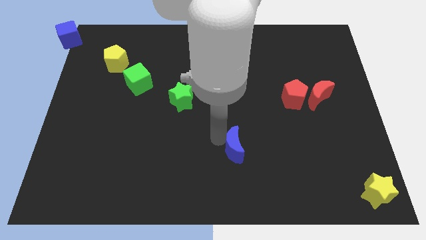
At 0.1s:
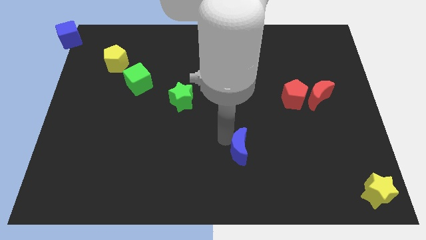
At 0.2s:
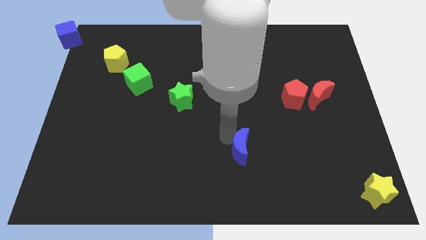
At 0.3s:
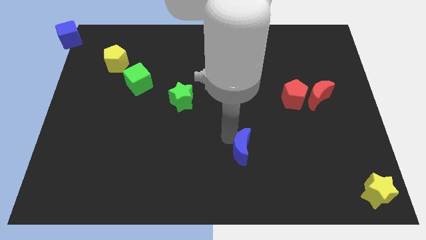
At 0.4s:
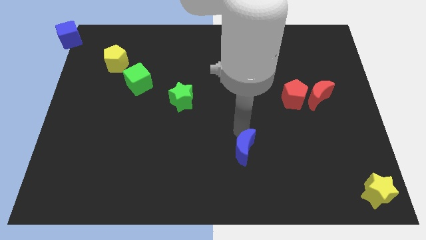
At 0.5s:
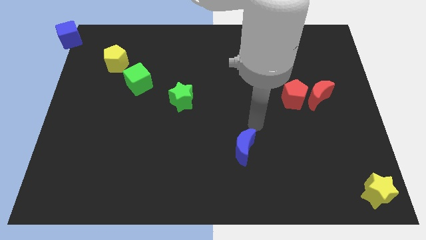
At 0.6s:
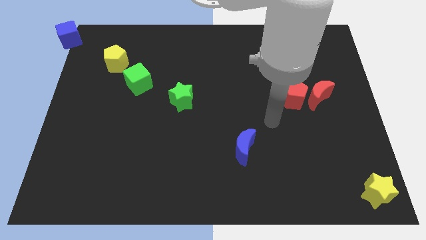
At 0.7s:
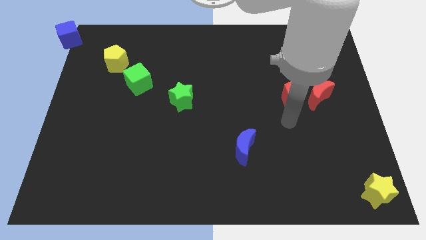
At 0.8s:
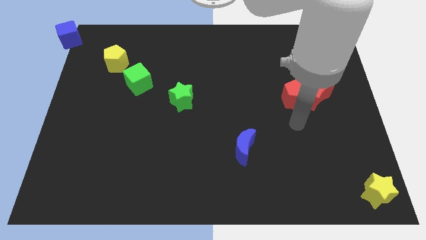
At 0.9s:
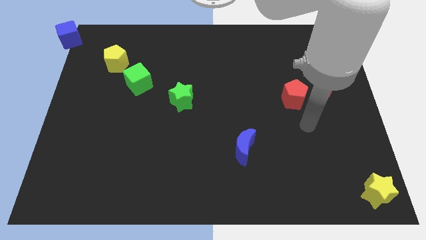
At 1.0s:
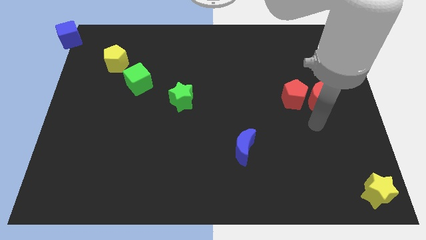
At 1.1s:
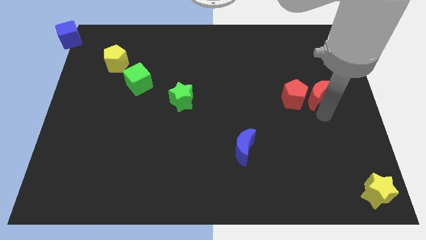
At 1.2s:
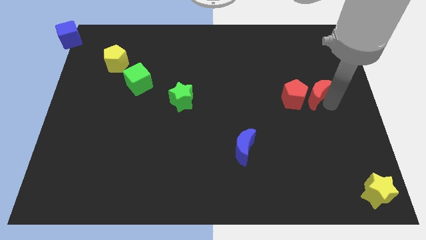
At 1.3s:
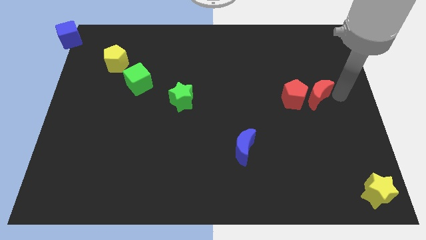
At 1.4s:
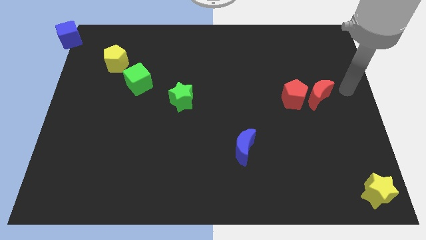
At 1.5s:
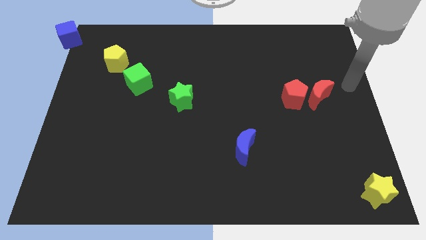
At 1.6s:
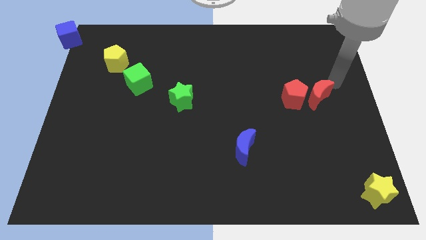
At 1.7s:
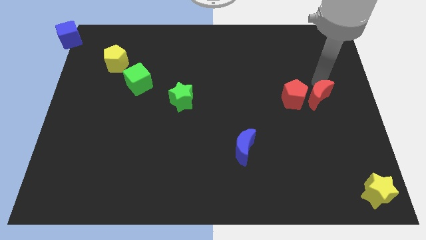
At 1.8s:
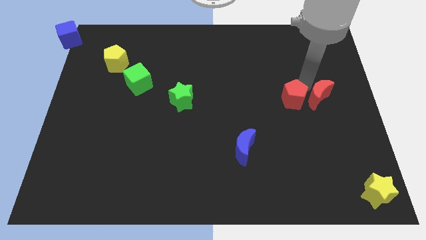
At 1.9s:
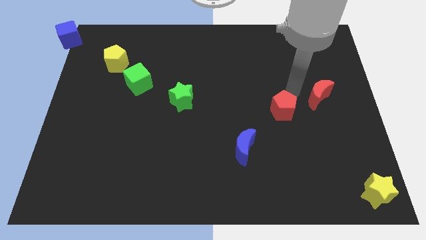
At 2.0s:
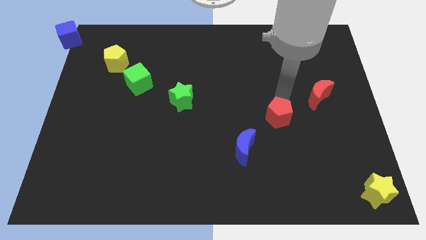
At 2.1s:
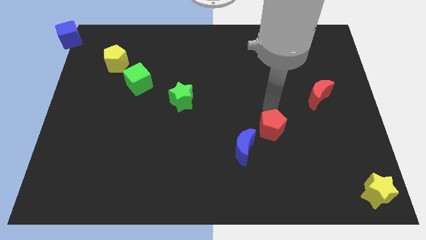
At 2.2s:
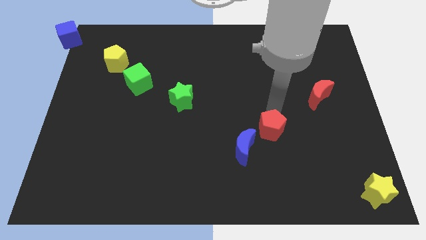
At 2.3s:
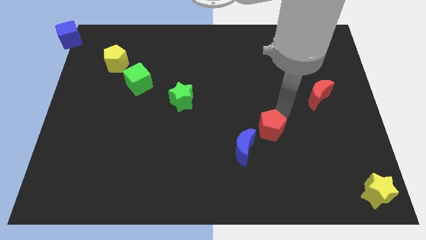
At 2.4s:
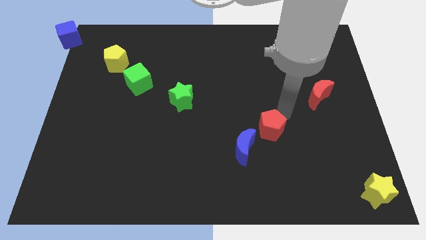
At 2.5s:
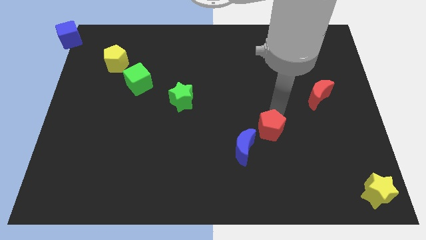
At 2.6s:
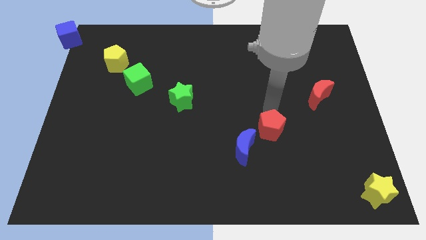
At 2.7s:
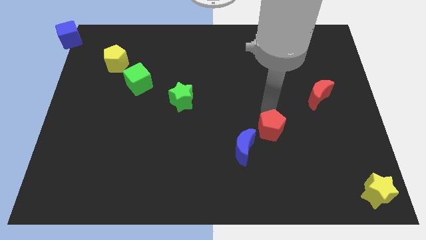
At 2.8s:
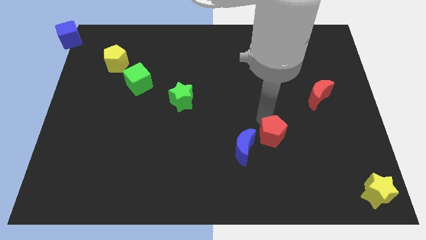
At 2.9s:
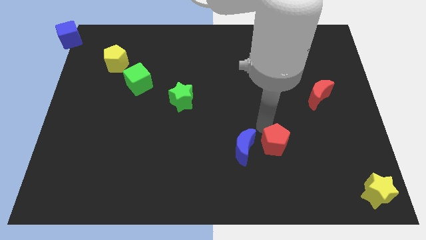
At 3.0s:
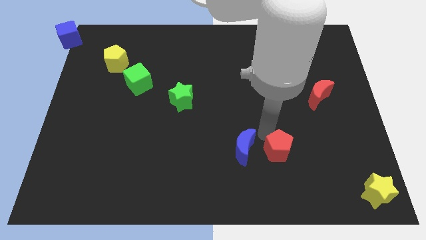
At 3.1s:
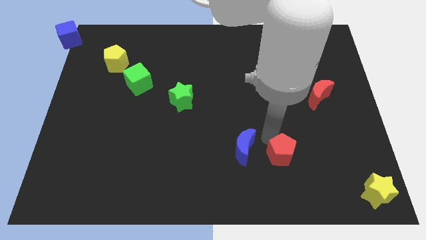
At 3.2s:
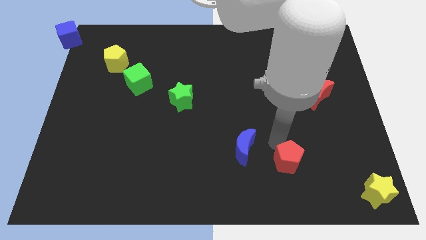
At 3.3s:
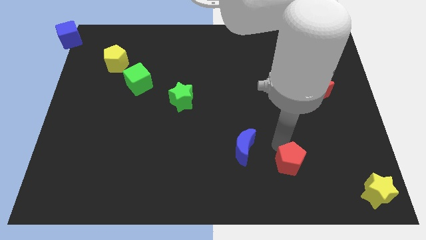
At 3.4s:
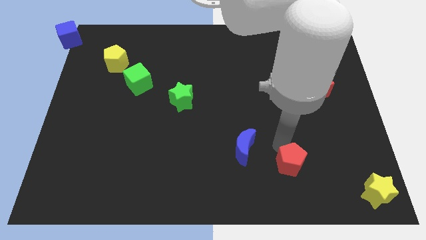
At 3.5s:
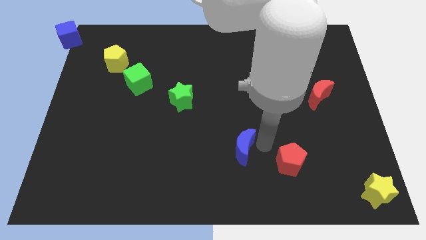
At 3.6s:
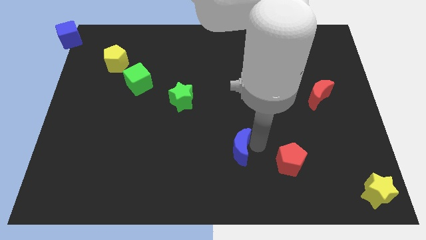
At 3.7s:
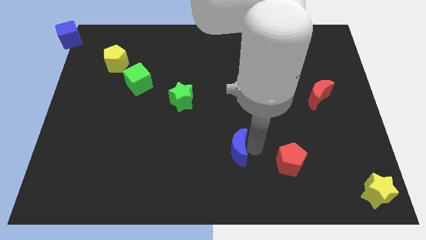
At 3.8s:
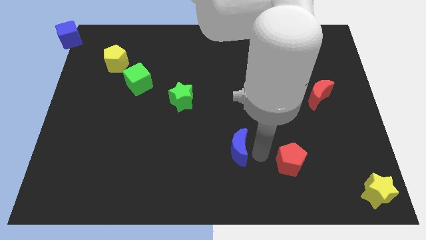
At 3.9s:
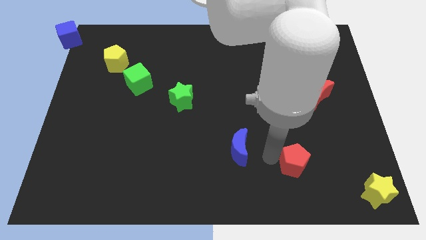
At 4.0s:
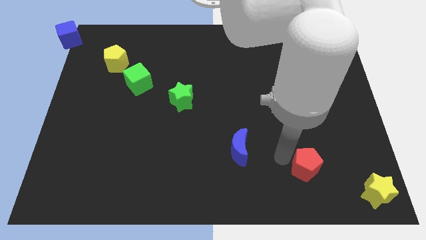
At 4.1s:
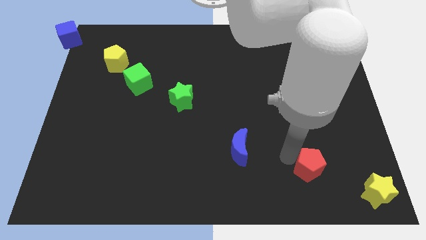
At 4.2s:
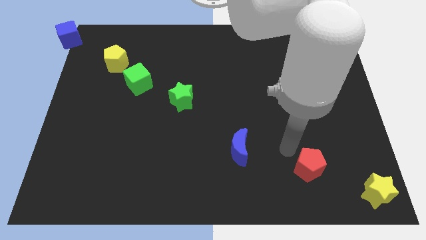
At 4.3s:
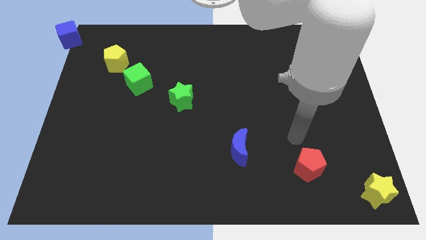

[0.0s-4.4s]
move red pentagon towards the yellow star

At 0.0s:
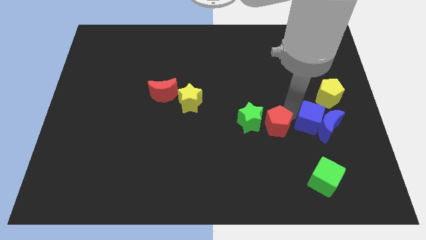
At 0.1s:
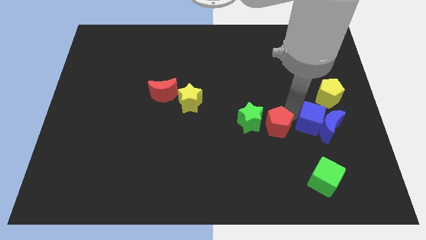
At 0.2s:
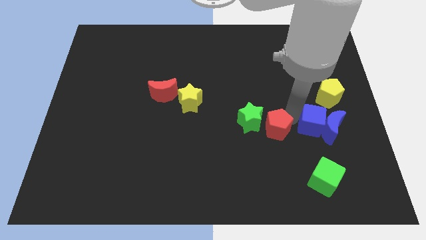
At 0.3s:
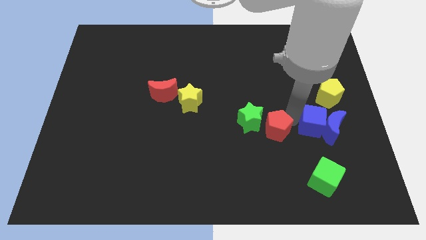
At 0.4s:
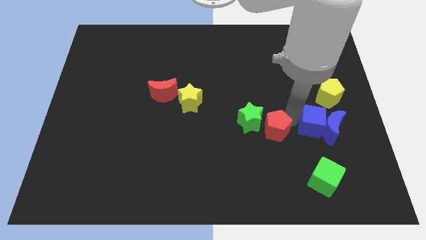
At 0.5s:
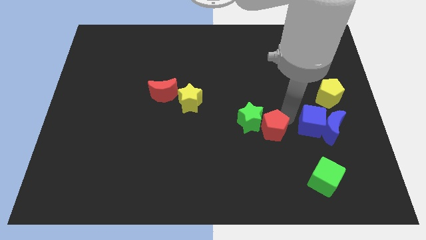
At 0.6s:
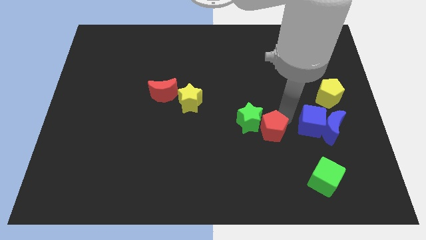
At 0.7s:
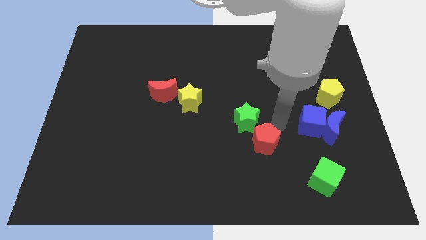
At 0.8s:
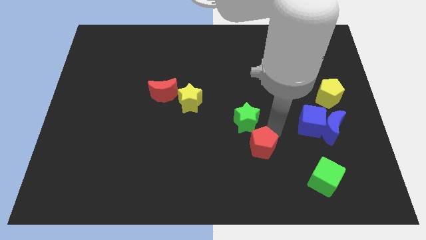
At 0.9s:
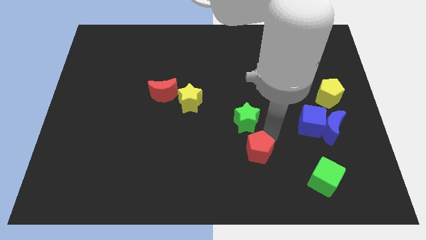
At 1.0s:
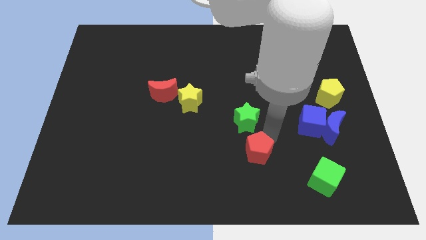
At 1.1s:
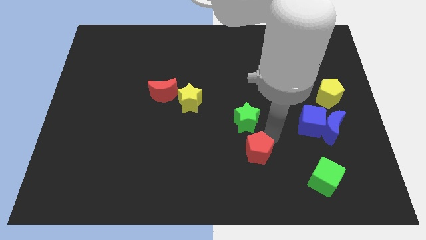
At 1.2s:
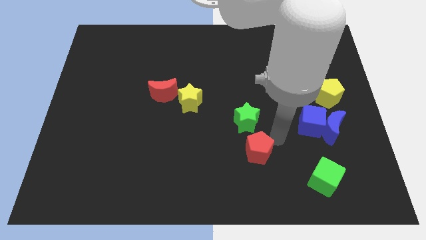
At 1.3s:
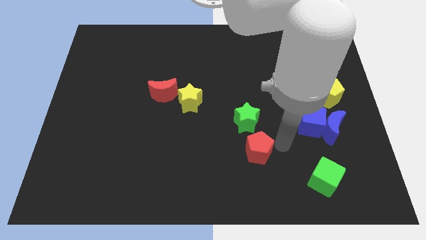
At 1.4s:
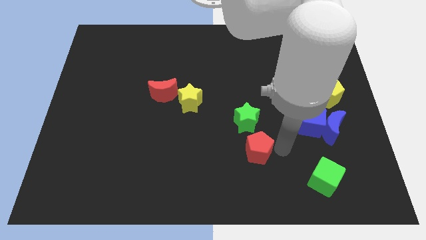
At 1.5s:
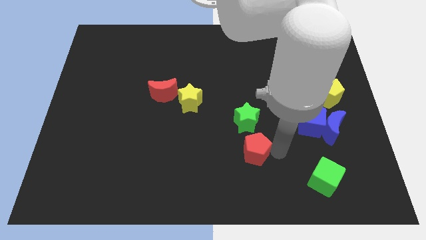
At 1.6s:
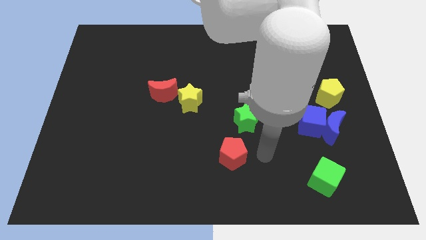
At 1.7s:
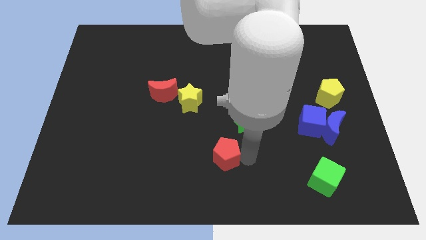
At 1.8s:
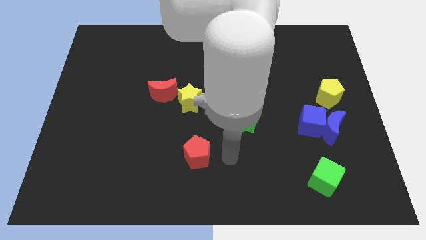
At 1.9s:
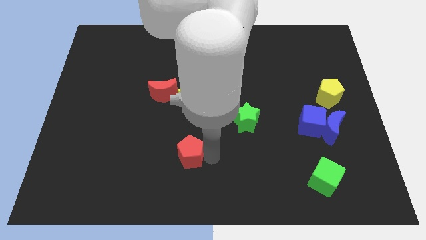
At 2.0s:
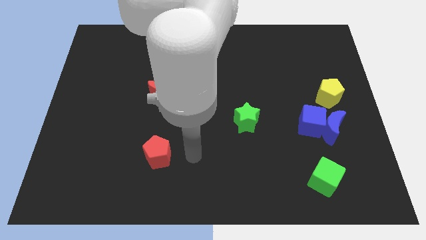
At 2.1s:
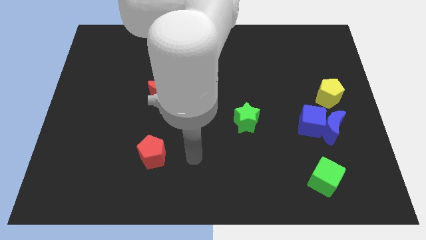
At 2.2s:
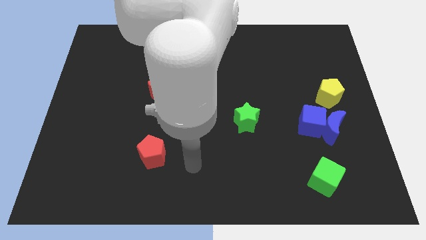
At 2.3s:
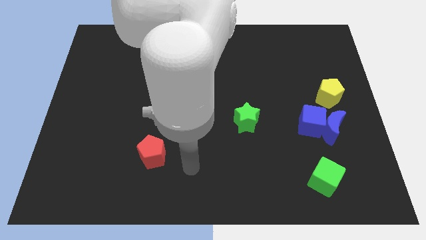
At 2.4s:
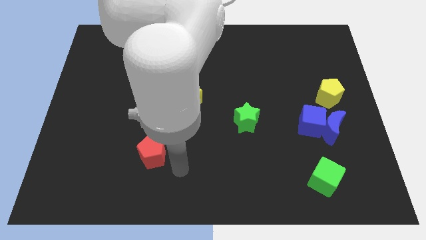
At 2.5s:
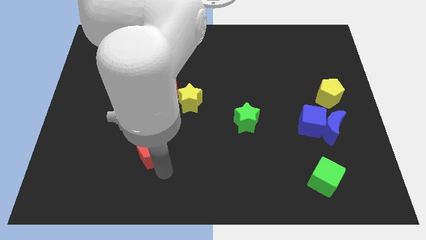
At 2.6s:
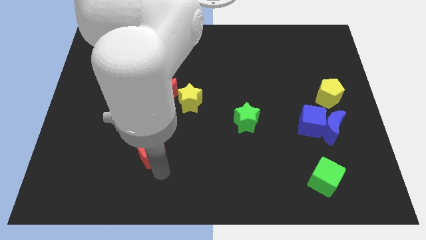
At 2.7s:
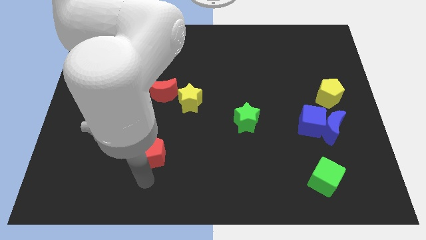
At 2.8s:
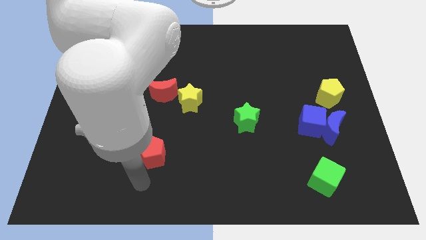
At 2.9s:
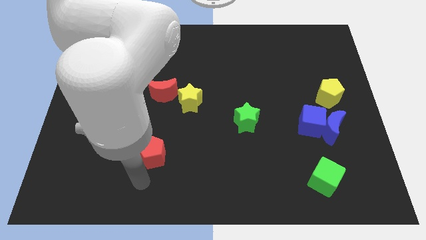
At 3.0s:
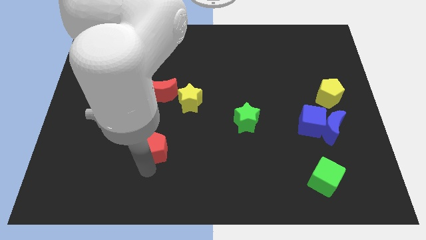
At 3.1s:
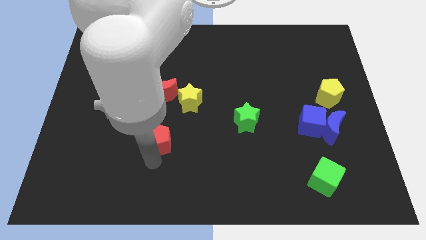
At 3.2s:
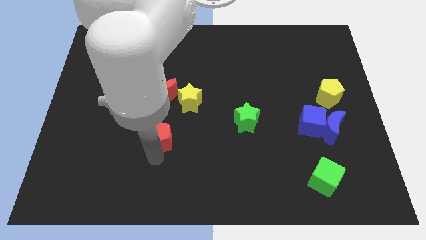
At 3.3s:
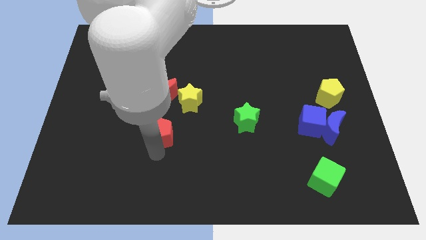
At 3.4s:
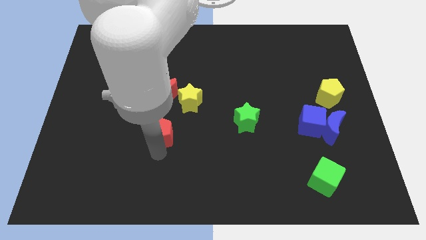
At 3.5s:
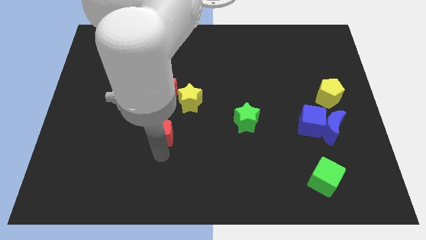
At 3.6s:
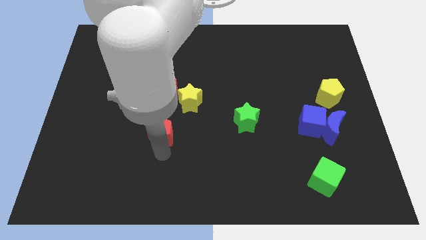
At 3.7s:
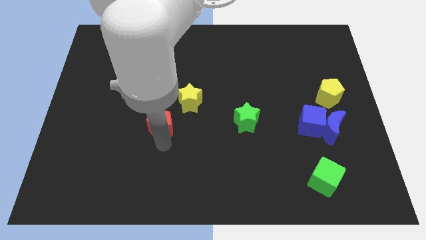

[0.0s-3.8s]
move the red pentagon to the bottom of the red crescent

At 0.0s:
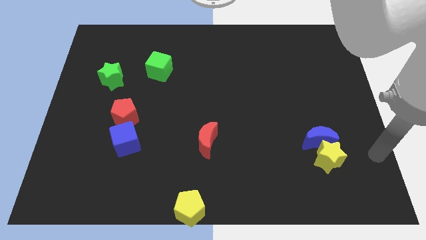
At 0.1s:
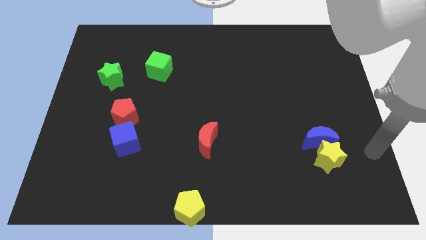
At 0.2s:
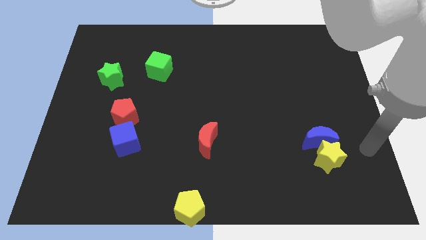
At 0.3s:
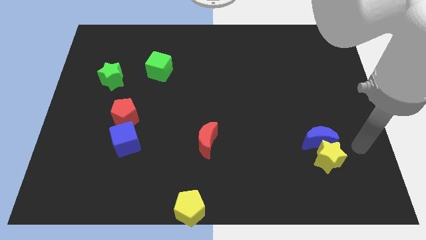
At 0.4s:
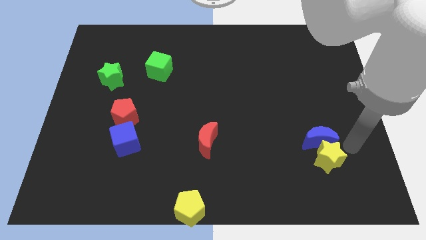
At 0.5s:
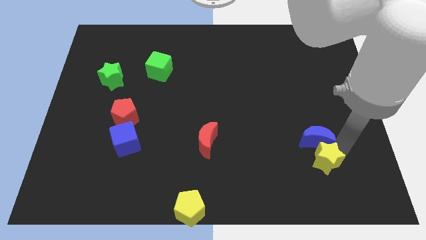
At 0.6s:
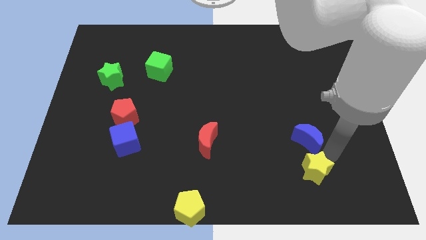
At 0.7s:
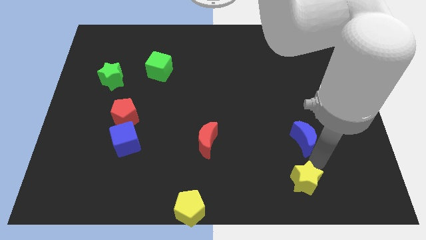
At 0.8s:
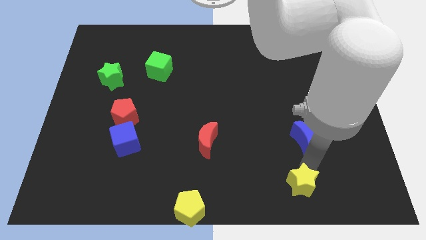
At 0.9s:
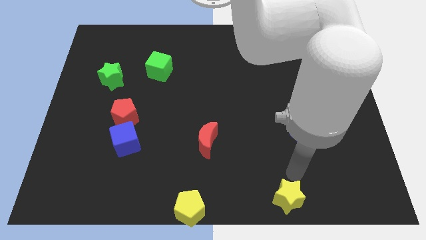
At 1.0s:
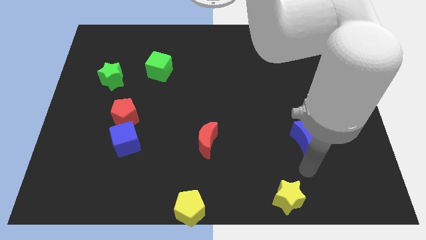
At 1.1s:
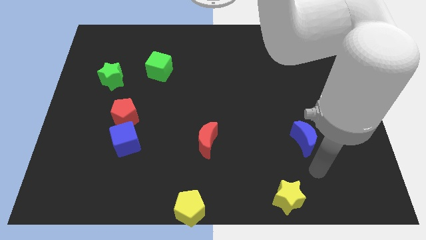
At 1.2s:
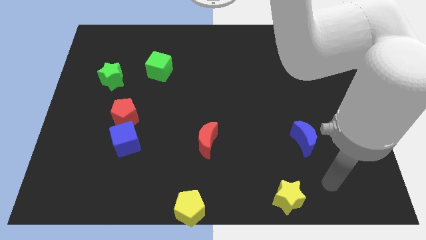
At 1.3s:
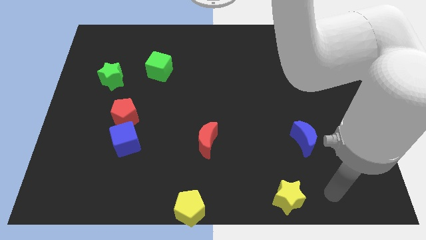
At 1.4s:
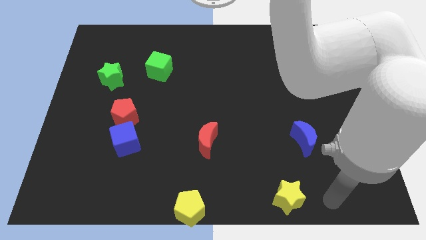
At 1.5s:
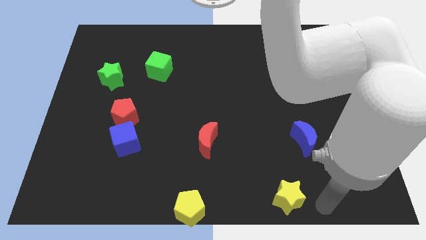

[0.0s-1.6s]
push yellow pentagon away from blue crescent
